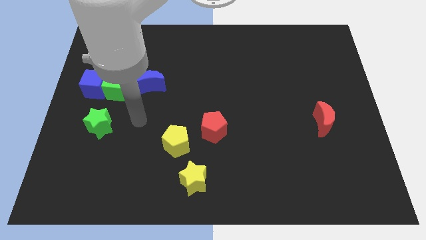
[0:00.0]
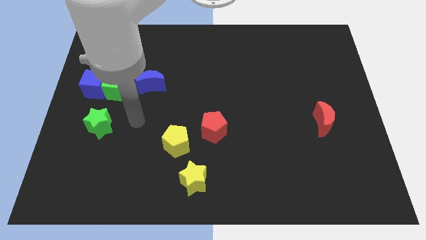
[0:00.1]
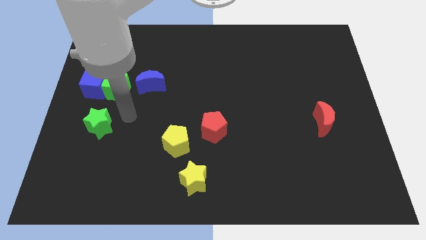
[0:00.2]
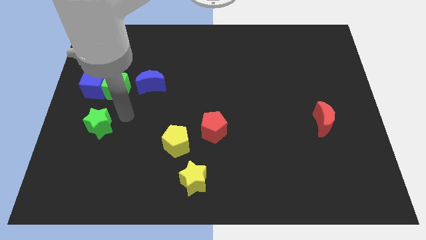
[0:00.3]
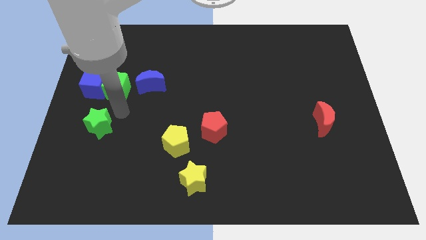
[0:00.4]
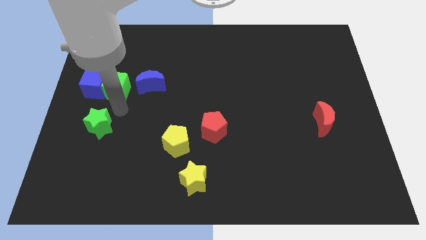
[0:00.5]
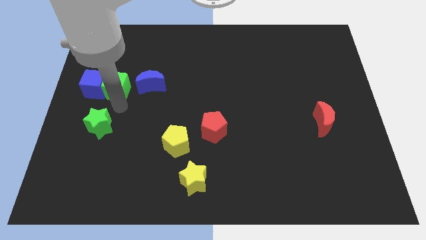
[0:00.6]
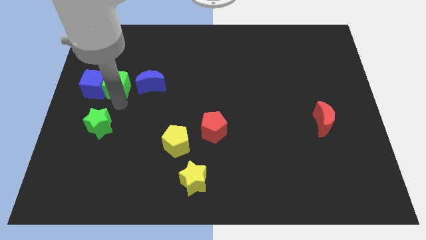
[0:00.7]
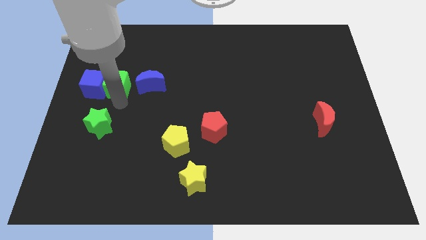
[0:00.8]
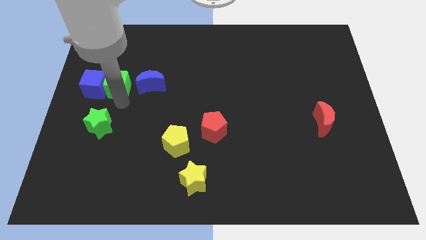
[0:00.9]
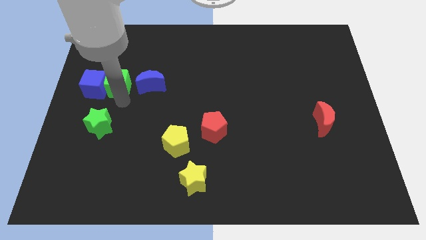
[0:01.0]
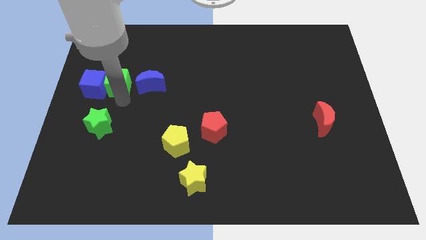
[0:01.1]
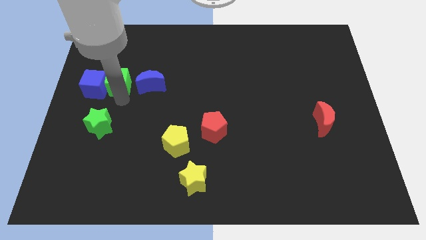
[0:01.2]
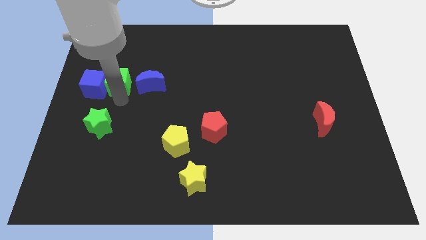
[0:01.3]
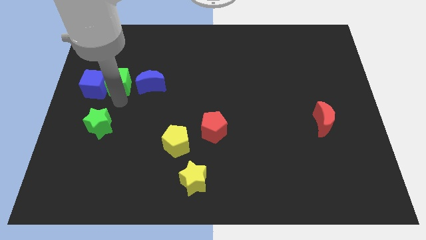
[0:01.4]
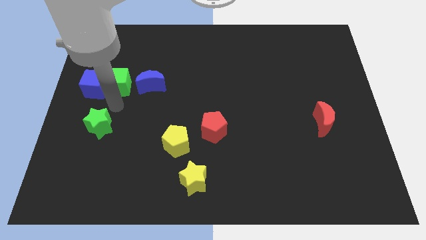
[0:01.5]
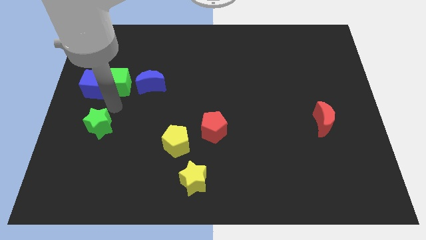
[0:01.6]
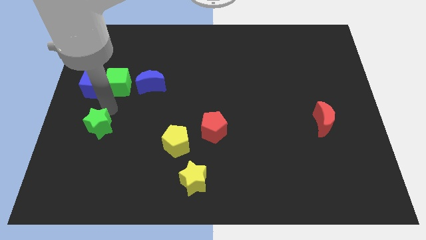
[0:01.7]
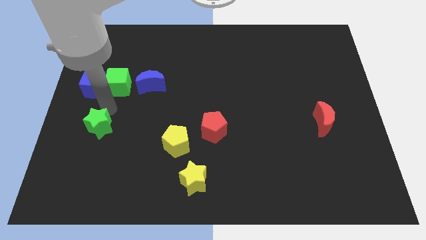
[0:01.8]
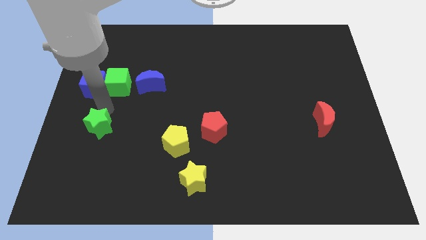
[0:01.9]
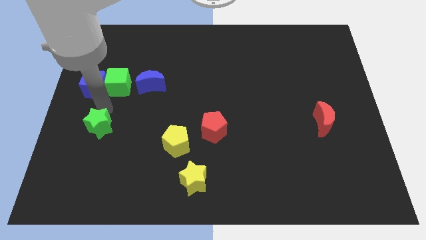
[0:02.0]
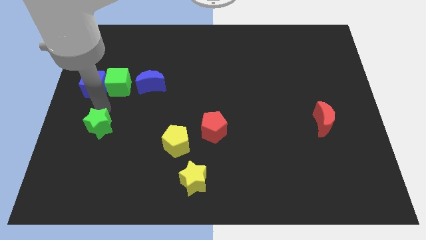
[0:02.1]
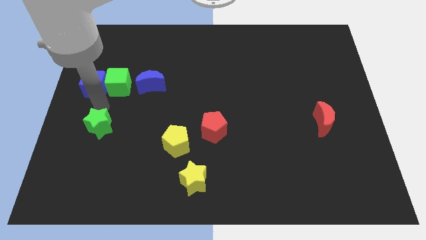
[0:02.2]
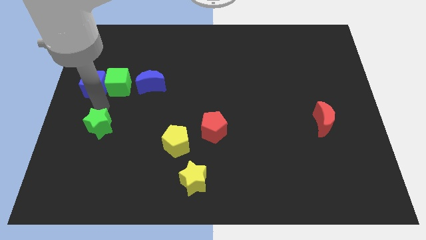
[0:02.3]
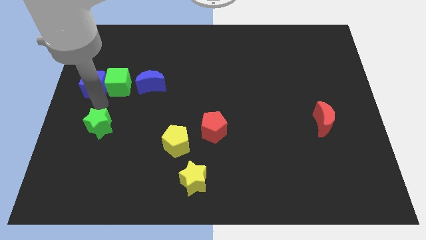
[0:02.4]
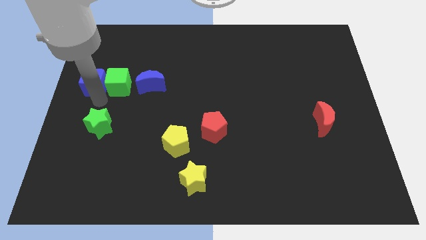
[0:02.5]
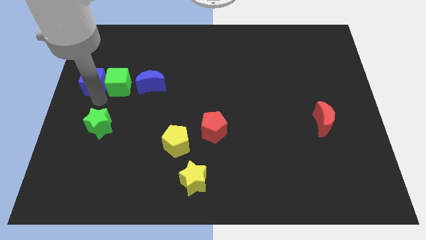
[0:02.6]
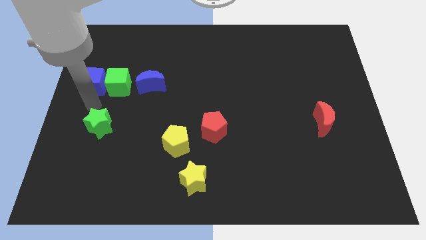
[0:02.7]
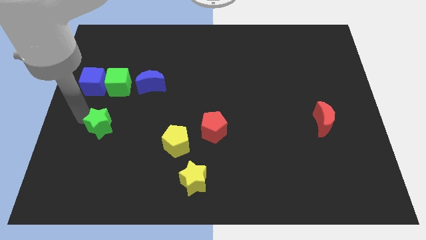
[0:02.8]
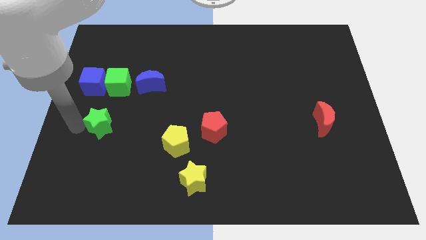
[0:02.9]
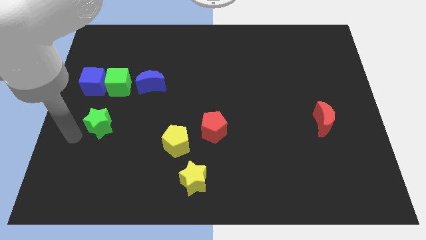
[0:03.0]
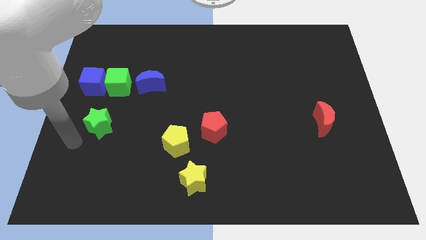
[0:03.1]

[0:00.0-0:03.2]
adjust the green cube horizontally left to the blue crescent along with the blue cube

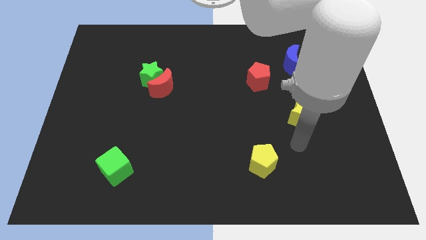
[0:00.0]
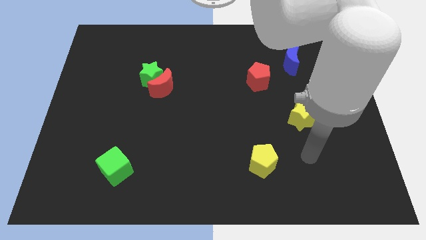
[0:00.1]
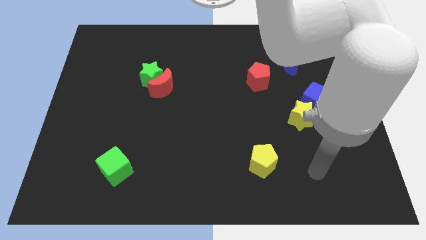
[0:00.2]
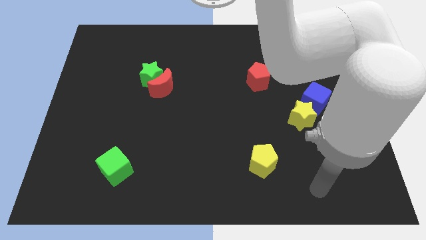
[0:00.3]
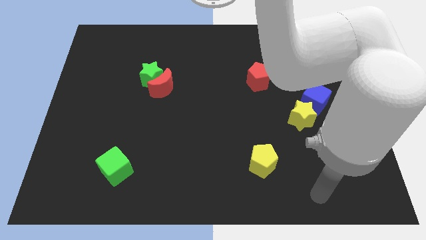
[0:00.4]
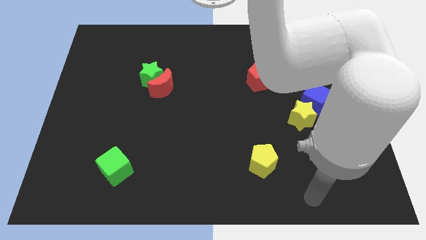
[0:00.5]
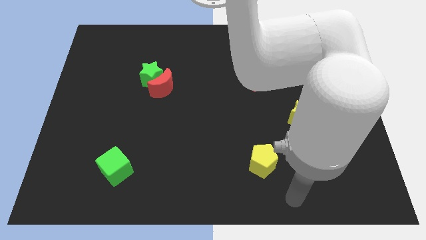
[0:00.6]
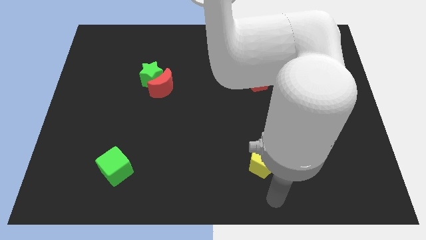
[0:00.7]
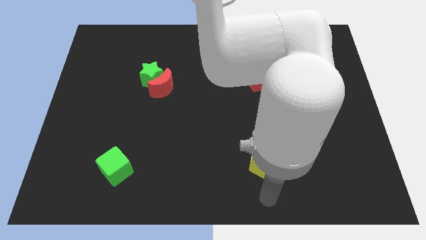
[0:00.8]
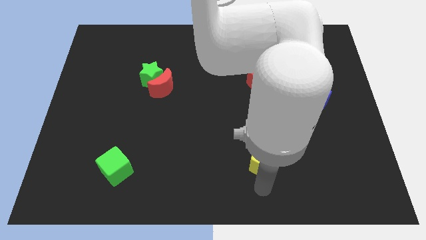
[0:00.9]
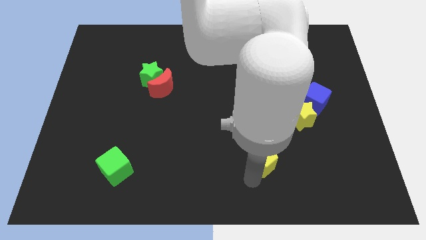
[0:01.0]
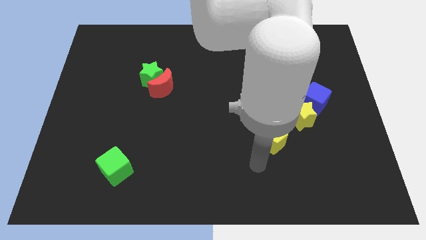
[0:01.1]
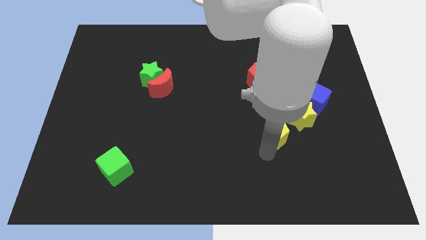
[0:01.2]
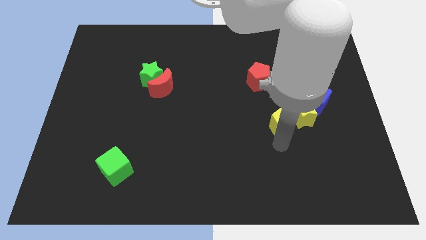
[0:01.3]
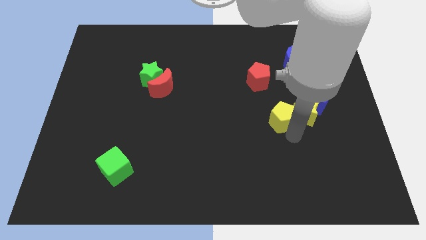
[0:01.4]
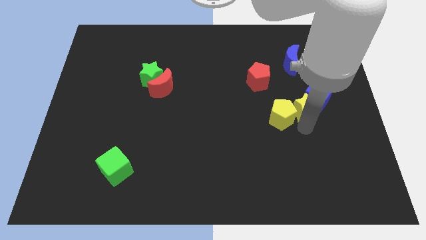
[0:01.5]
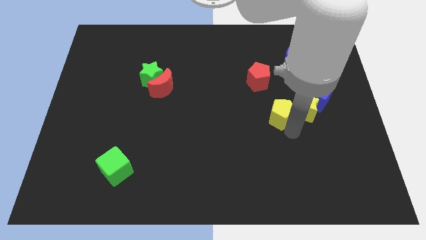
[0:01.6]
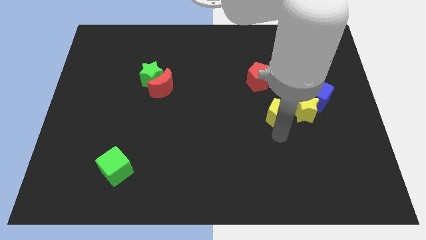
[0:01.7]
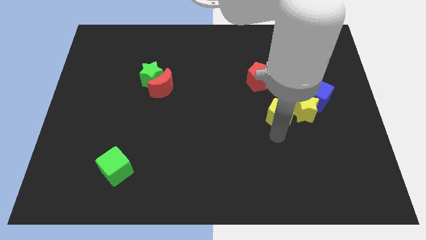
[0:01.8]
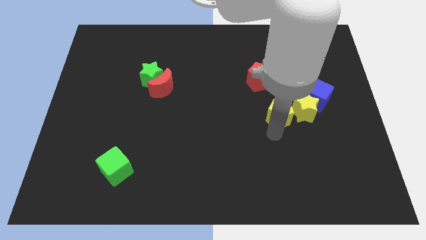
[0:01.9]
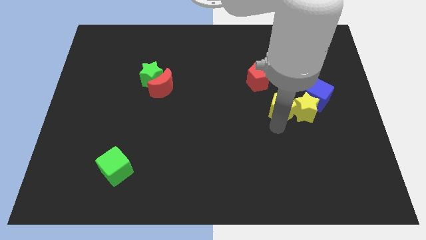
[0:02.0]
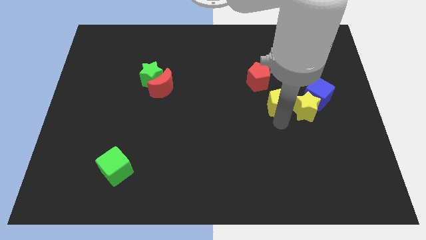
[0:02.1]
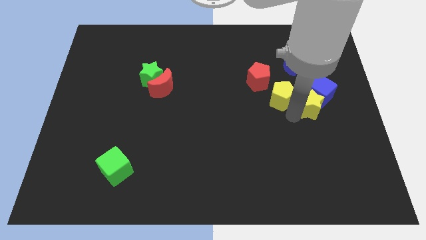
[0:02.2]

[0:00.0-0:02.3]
move the yellow pentagon into the yellow star

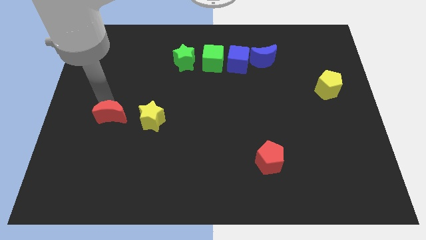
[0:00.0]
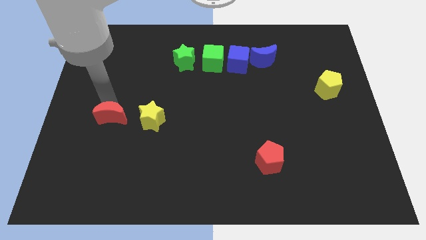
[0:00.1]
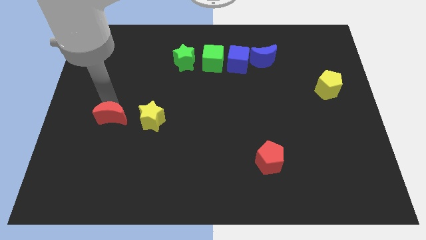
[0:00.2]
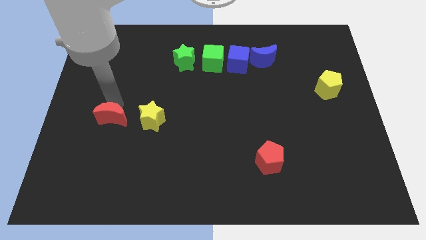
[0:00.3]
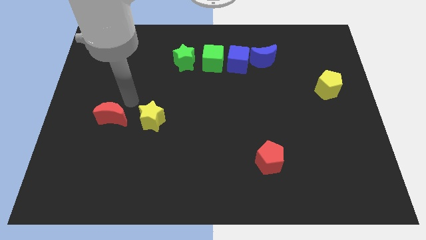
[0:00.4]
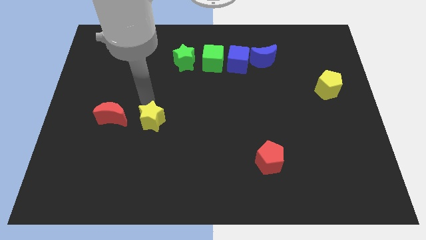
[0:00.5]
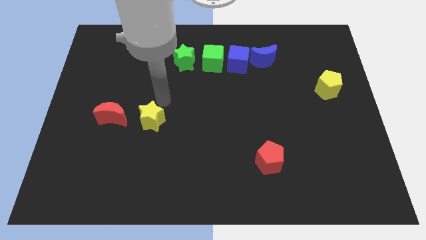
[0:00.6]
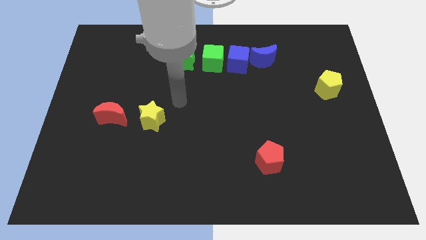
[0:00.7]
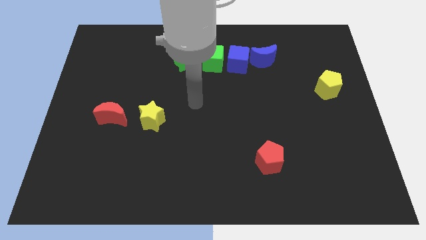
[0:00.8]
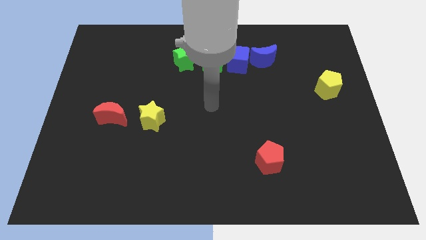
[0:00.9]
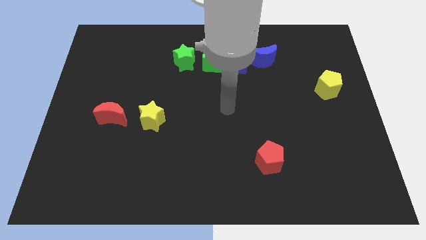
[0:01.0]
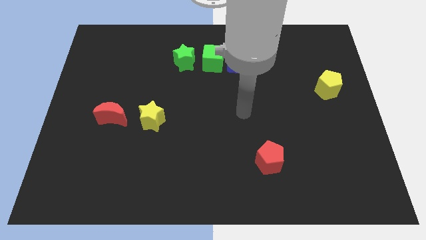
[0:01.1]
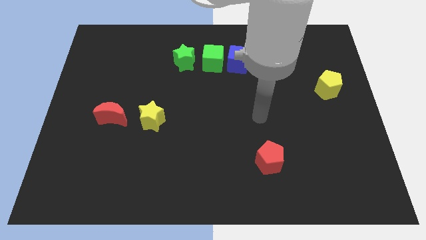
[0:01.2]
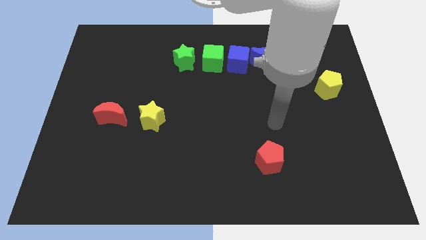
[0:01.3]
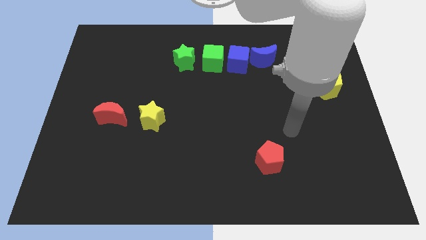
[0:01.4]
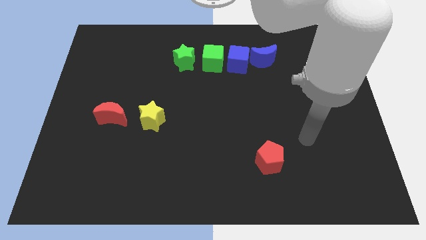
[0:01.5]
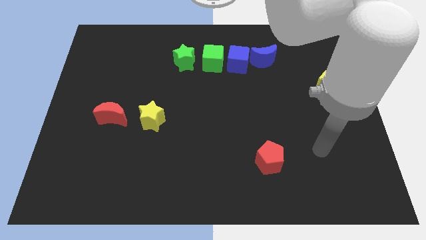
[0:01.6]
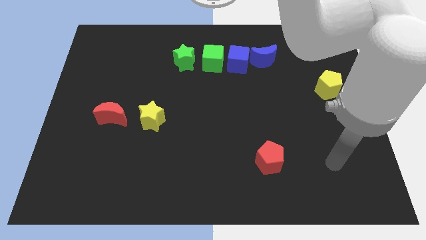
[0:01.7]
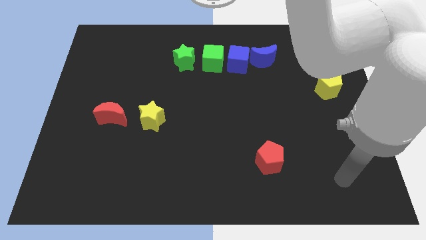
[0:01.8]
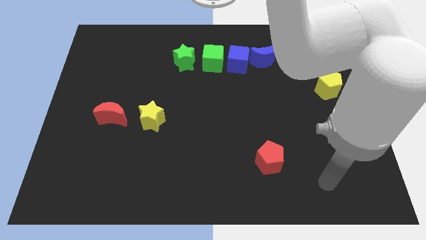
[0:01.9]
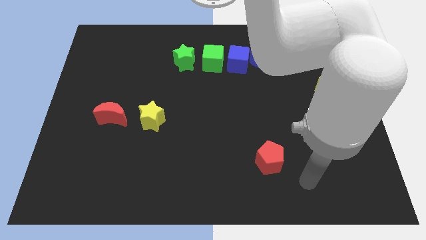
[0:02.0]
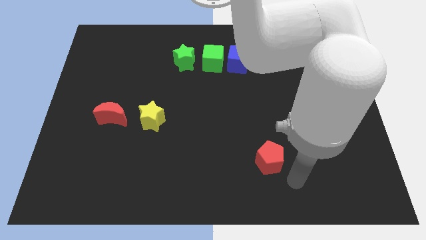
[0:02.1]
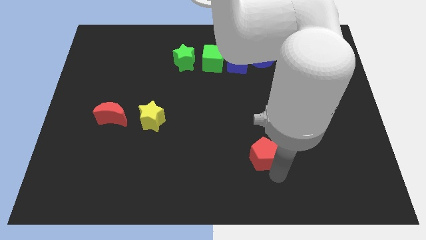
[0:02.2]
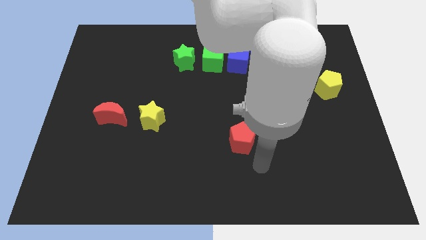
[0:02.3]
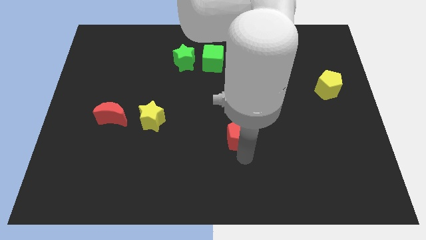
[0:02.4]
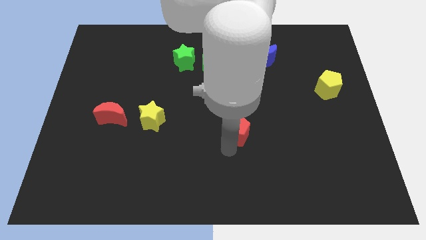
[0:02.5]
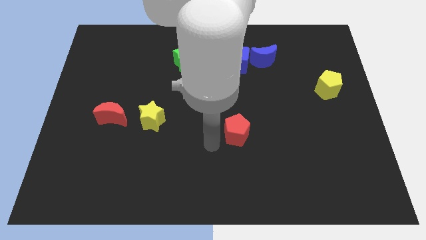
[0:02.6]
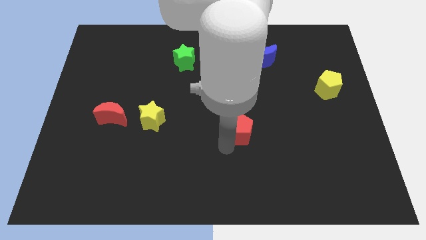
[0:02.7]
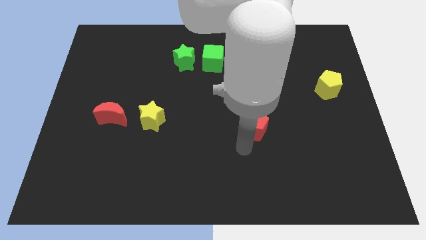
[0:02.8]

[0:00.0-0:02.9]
move red pentagon upwards

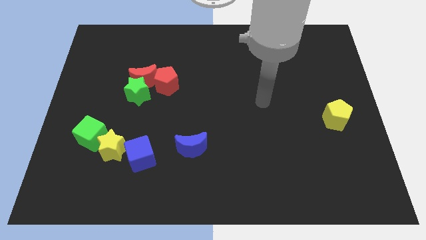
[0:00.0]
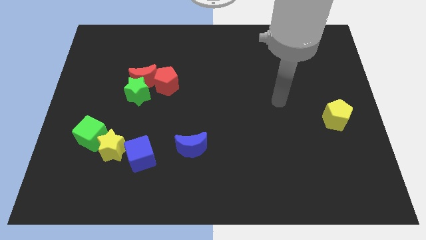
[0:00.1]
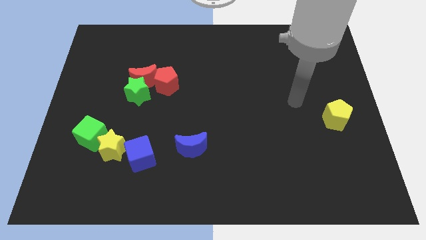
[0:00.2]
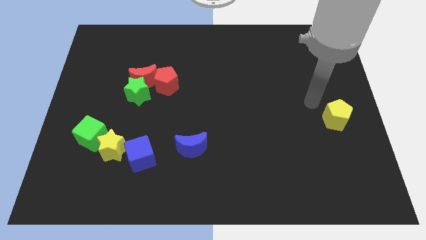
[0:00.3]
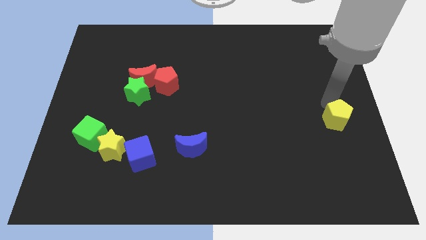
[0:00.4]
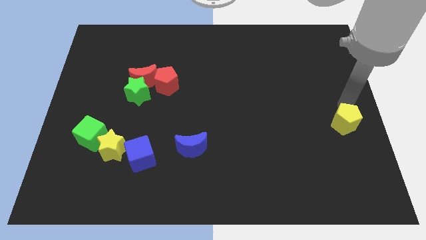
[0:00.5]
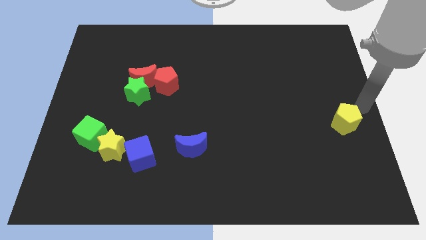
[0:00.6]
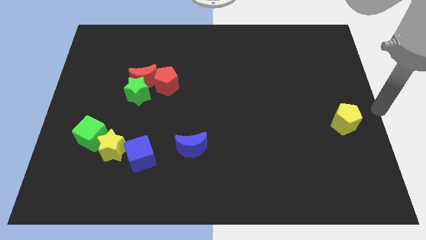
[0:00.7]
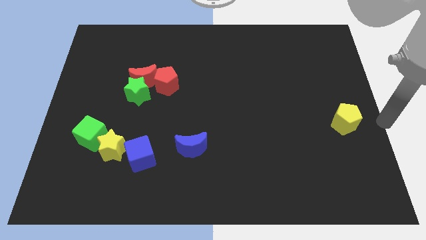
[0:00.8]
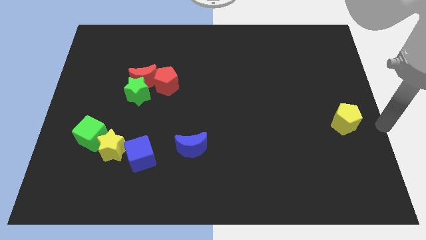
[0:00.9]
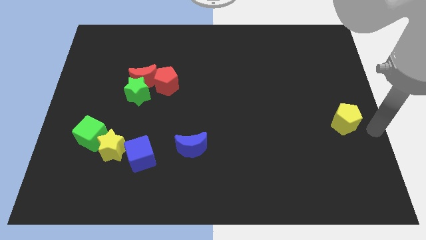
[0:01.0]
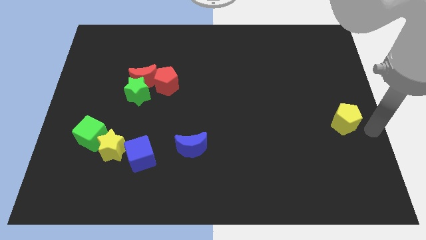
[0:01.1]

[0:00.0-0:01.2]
move the arm towards the right of the yellow pentagon
